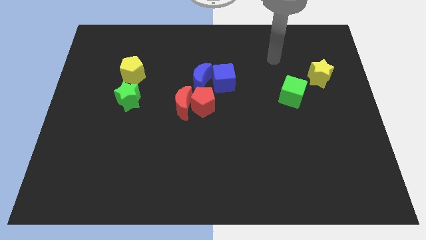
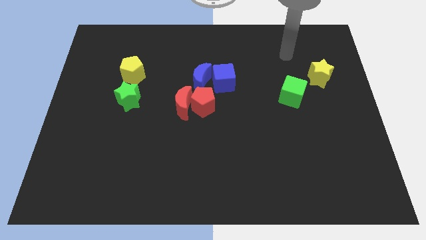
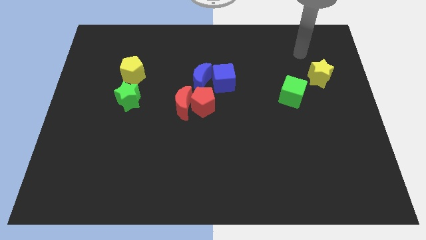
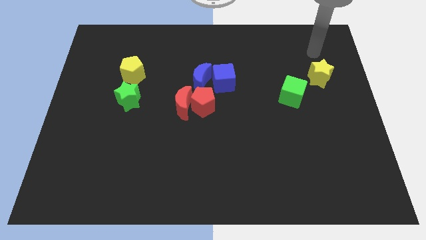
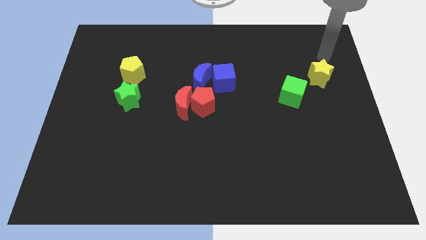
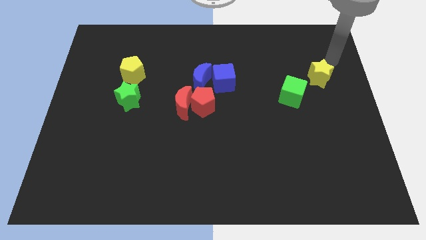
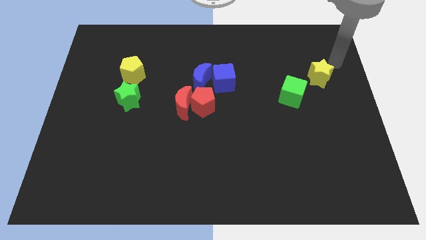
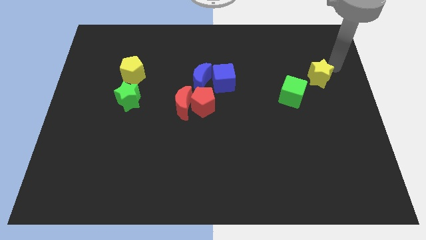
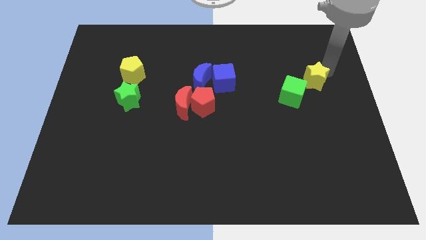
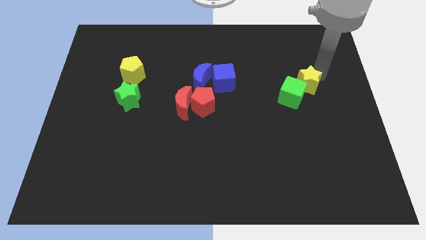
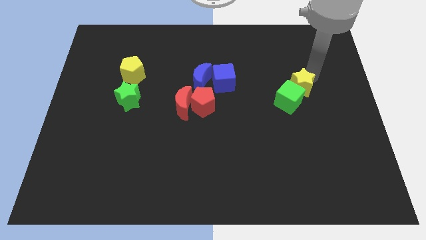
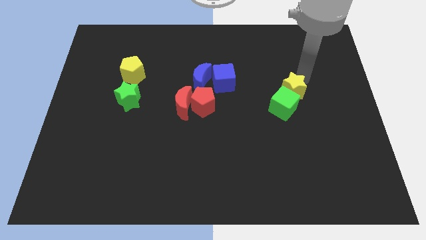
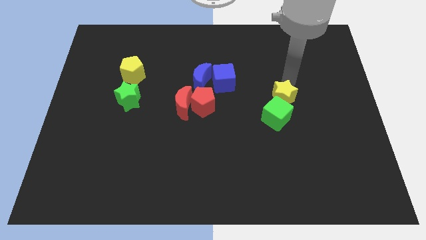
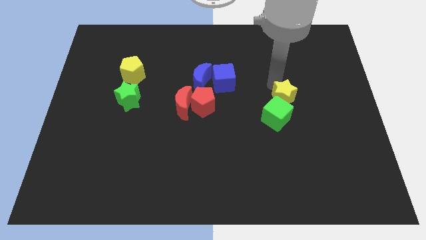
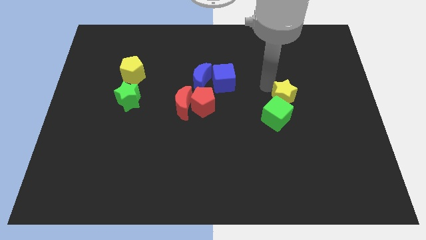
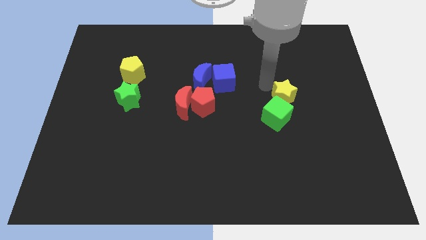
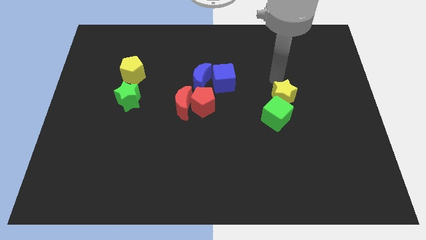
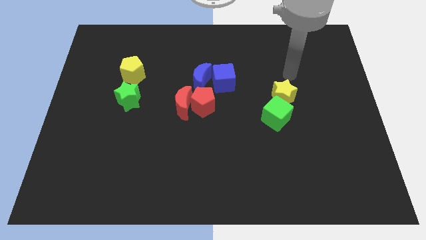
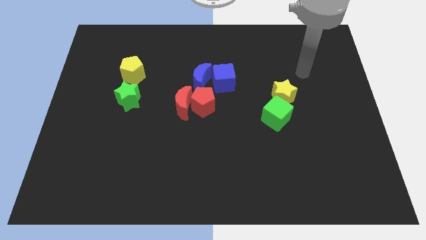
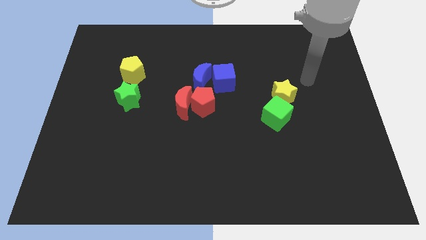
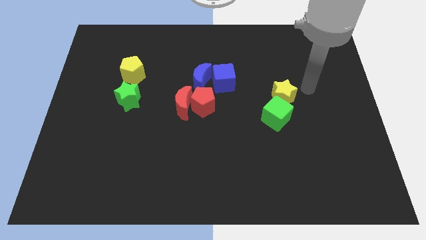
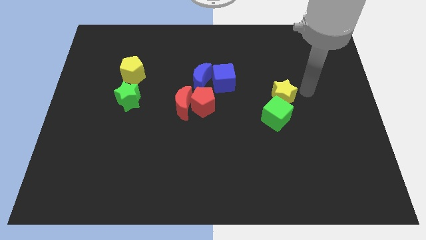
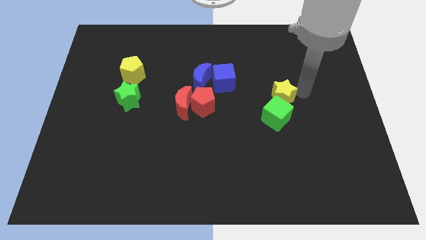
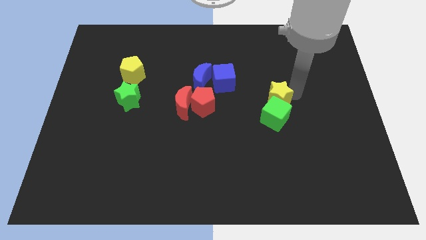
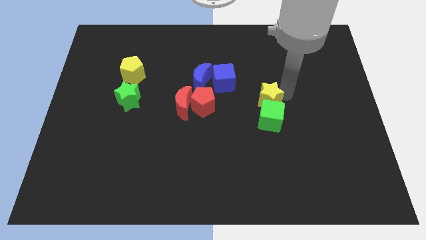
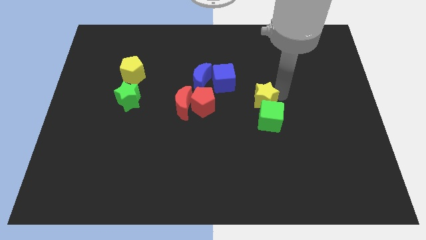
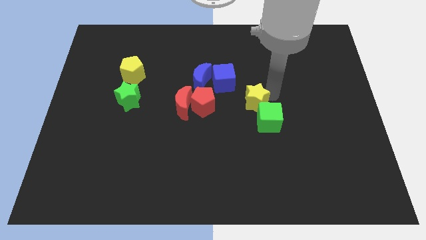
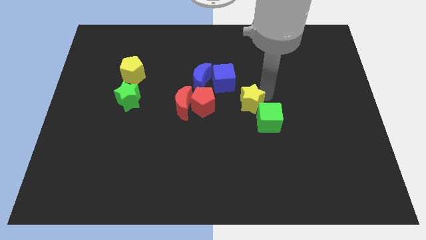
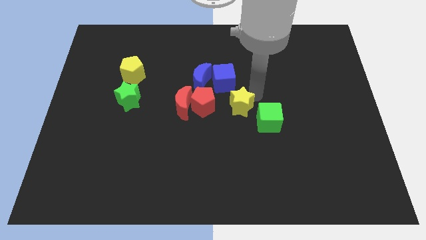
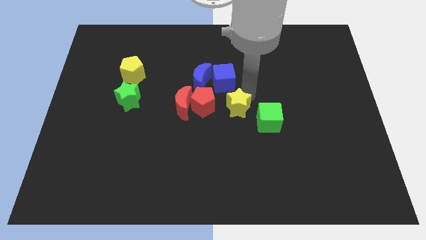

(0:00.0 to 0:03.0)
push the yellow star in to the green blockl

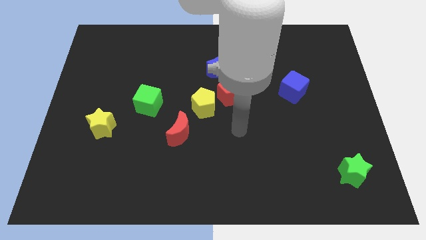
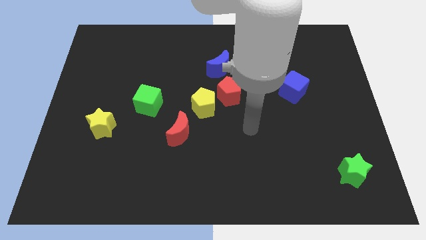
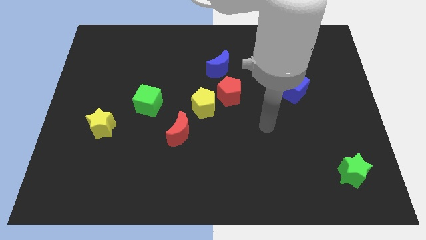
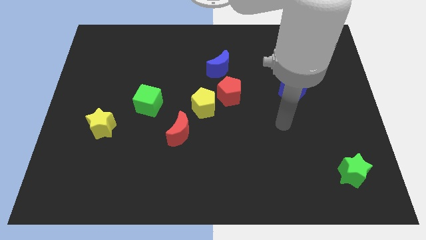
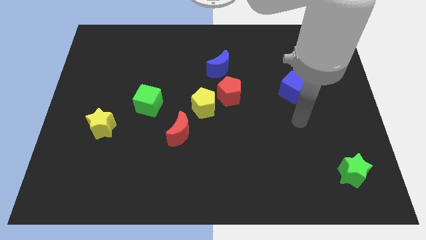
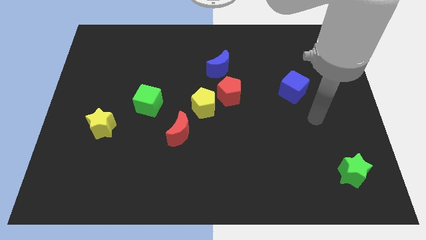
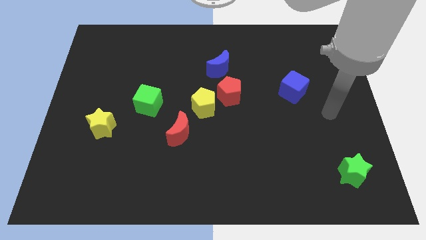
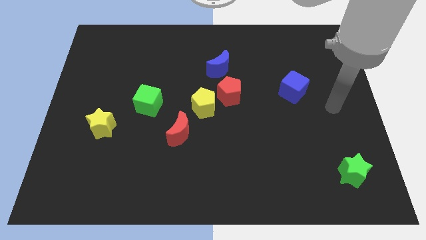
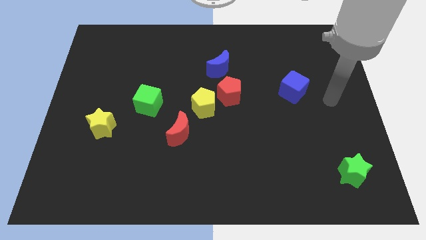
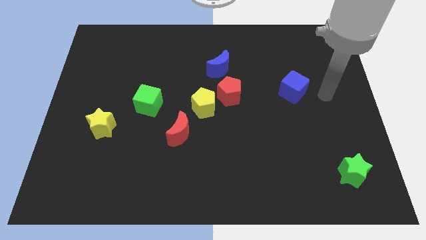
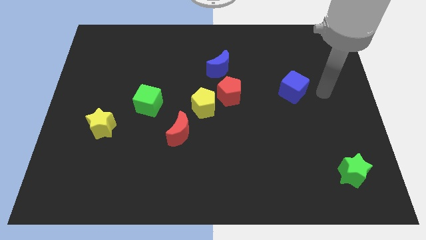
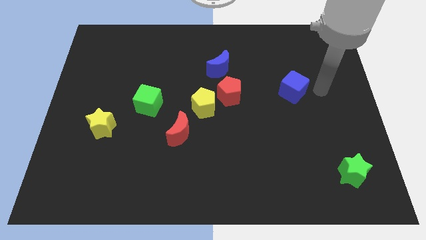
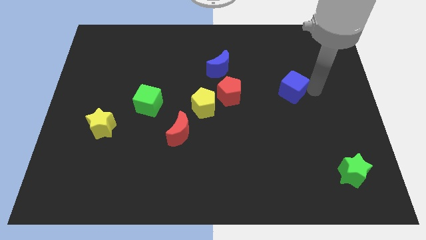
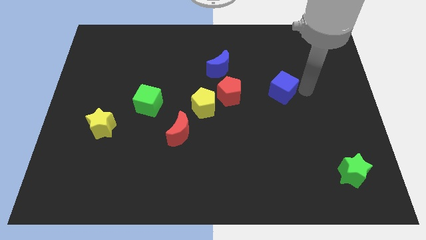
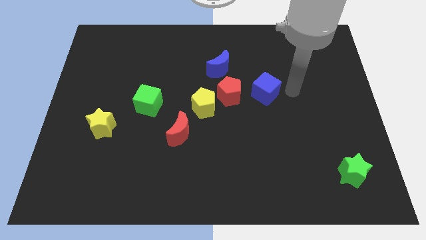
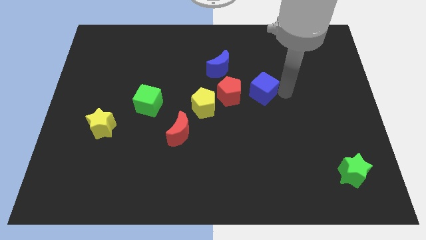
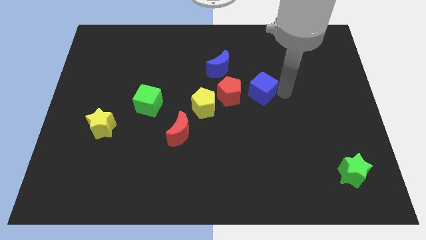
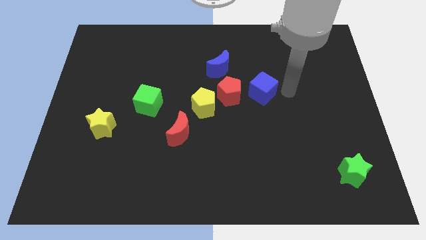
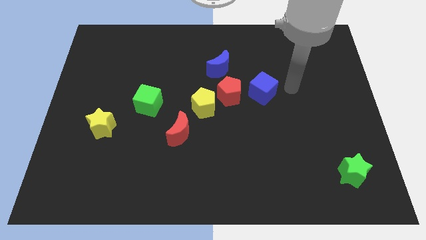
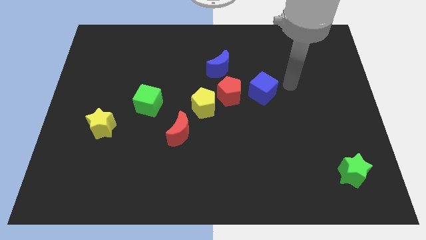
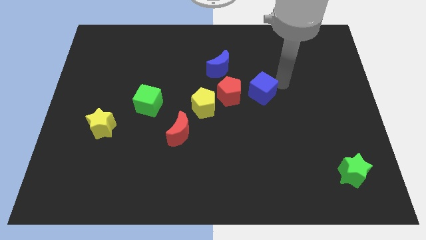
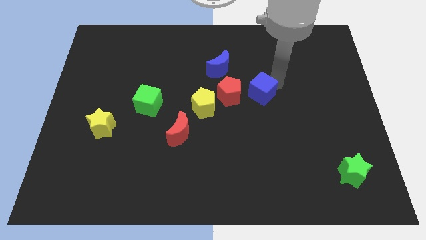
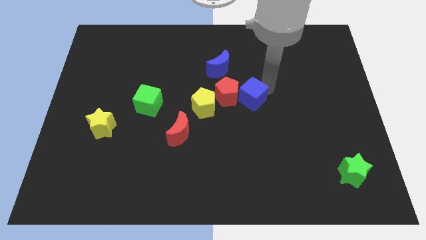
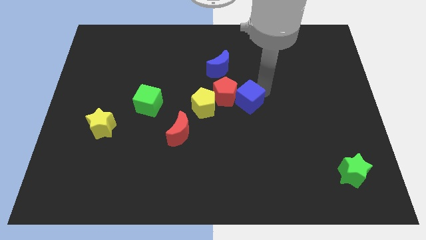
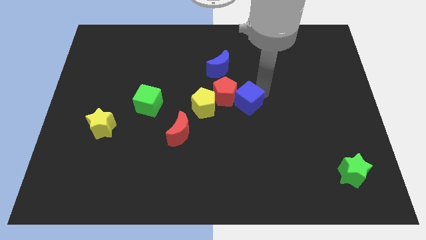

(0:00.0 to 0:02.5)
place the blue cube towards right side of the red pentagon

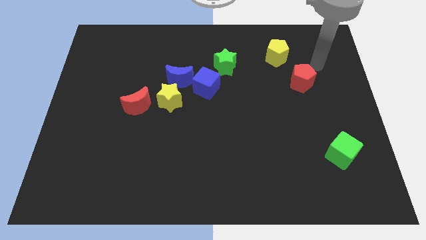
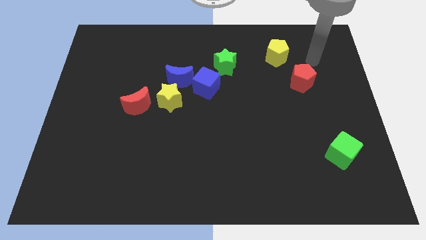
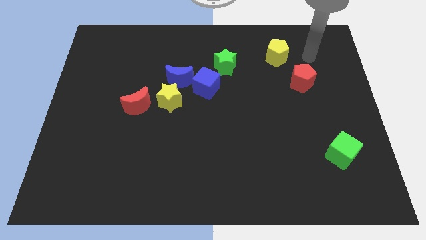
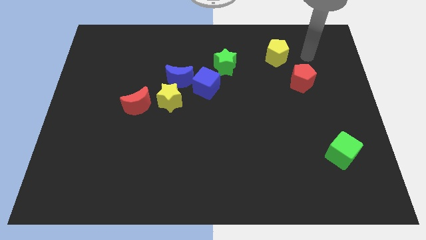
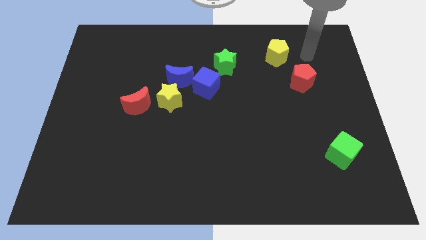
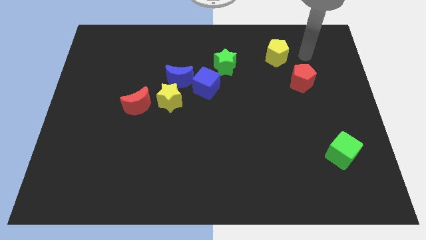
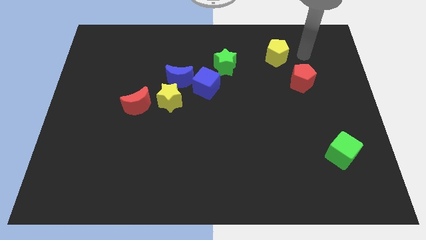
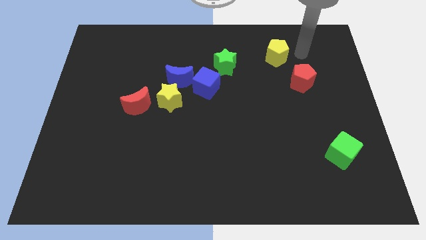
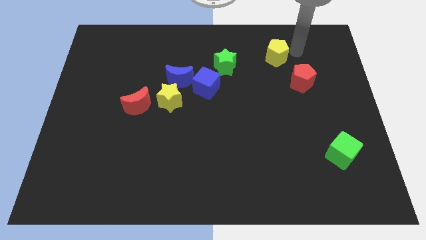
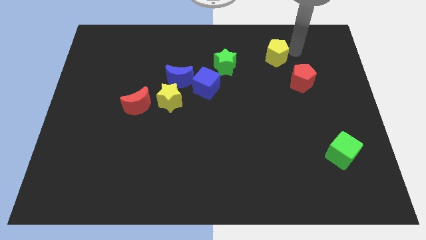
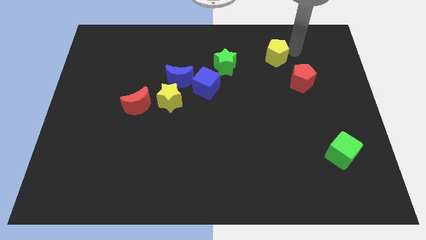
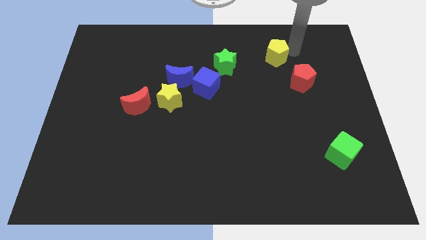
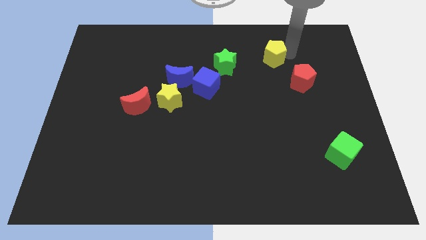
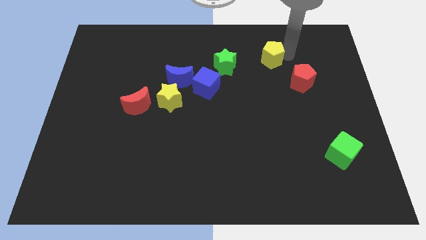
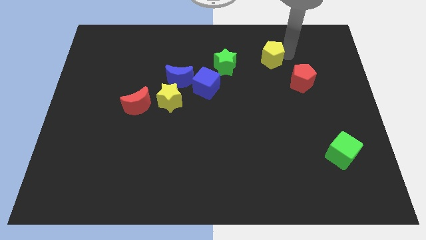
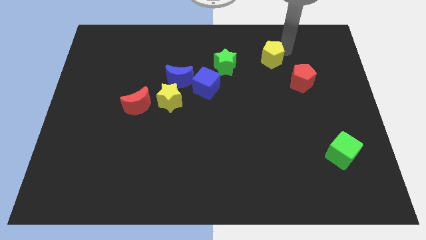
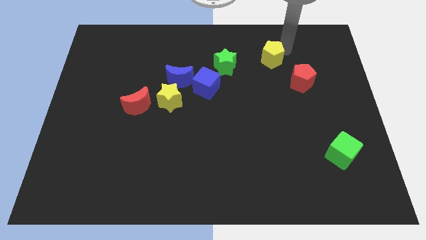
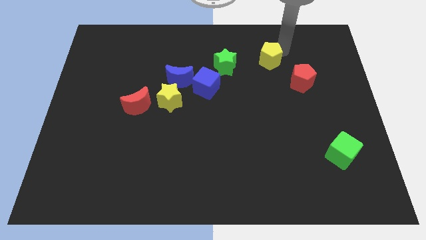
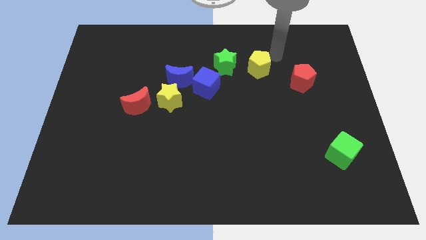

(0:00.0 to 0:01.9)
place the yellow pentagon right to the green star

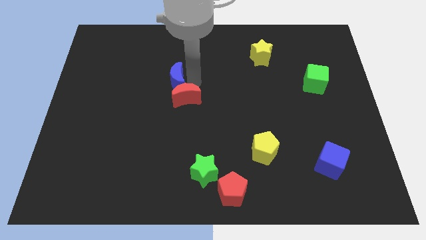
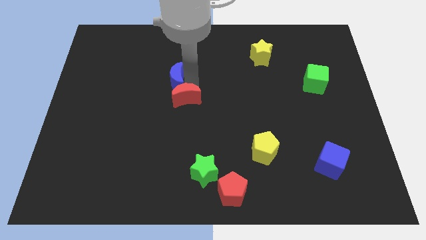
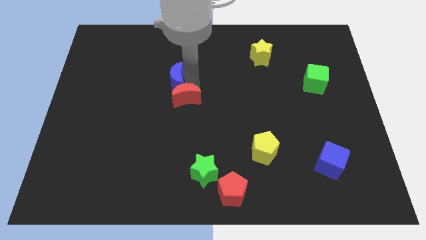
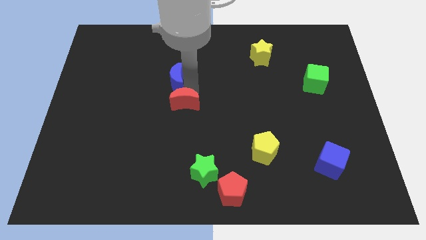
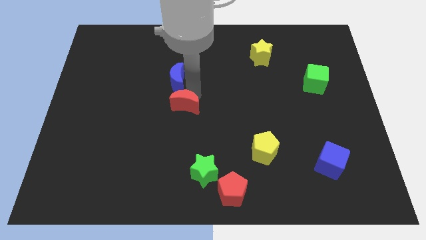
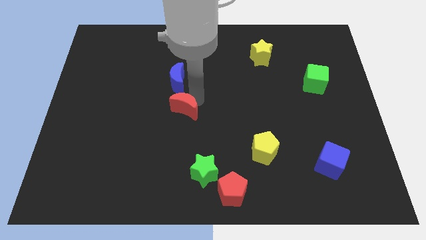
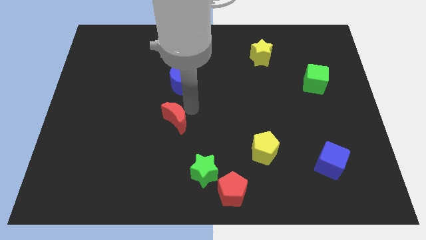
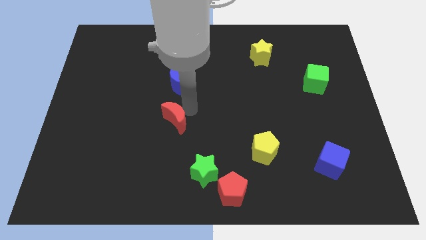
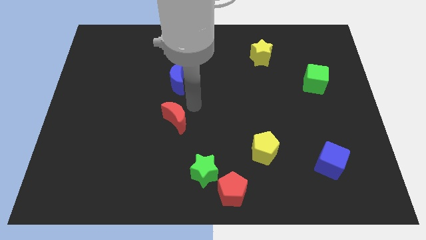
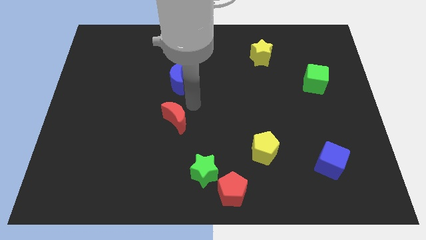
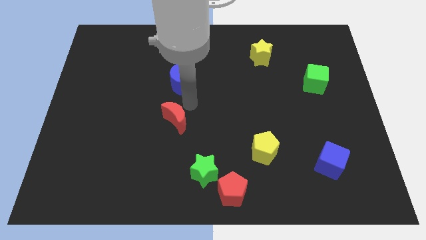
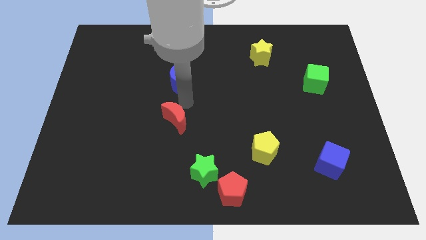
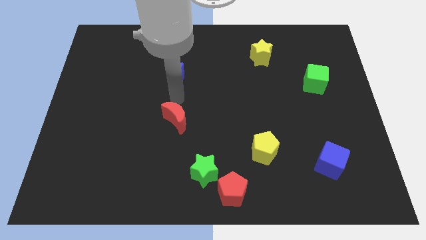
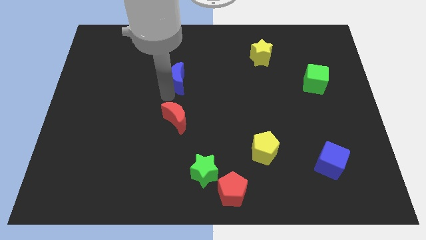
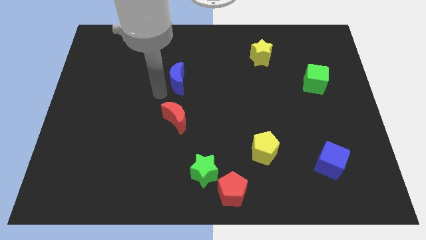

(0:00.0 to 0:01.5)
move away the red crescent from the blue crescent

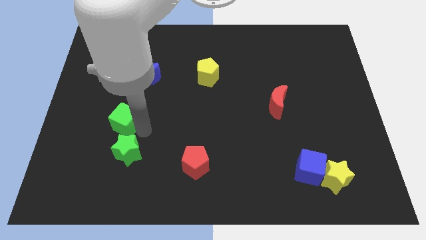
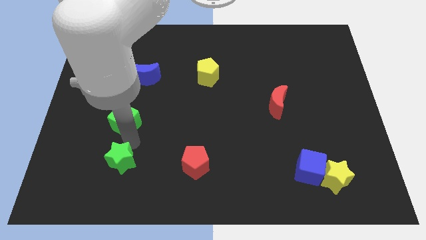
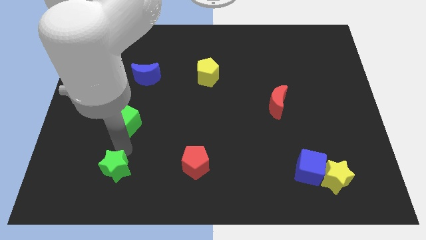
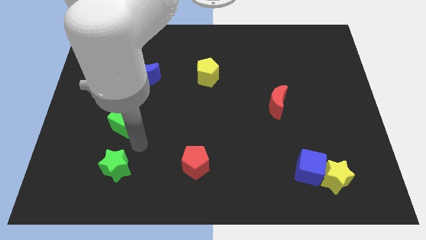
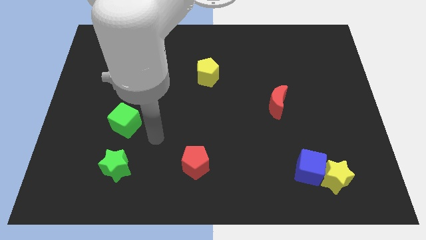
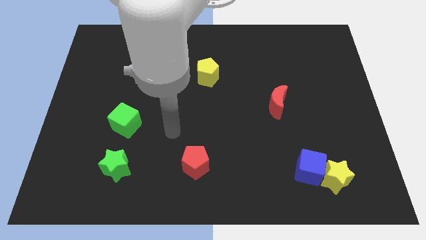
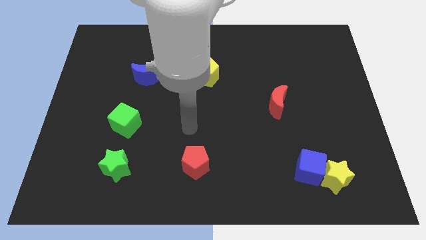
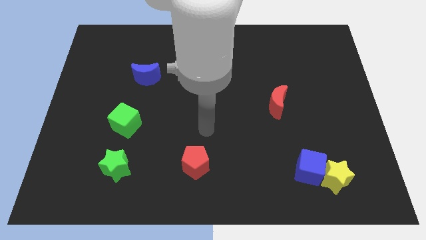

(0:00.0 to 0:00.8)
drag the green star slightly downwards
